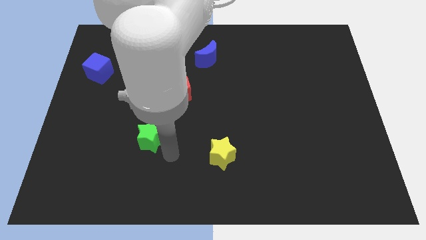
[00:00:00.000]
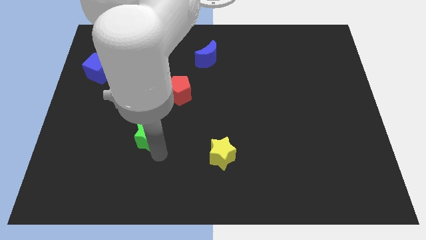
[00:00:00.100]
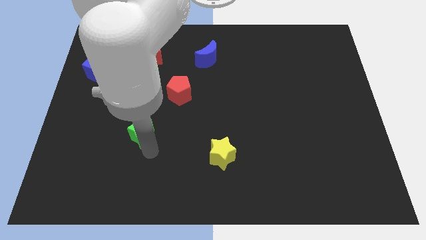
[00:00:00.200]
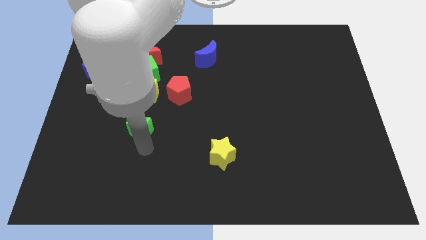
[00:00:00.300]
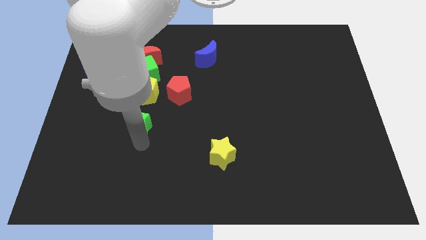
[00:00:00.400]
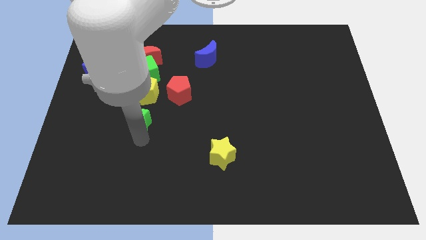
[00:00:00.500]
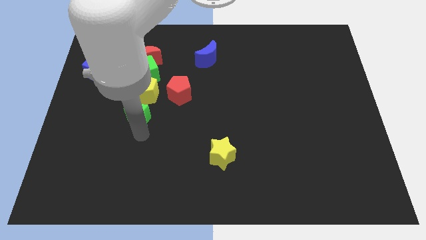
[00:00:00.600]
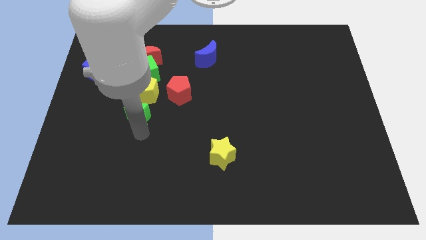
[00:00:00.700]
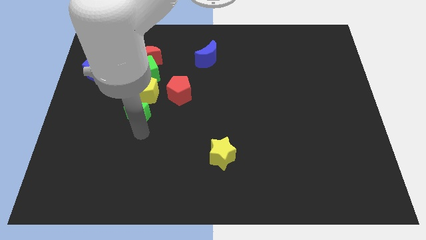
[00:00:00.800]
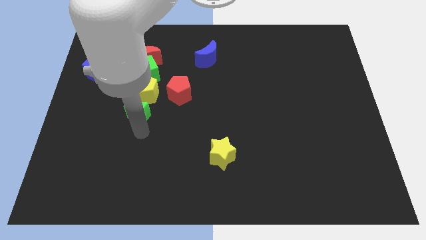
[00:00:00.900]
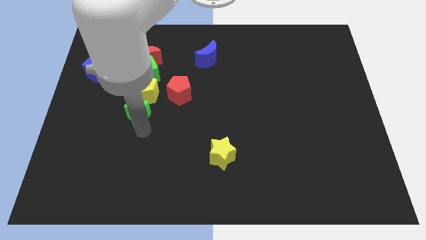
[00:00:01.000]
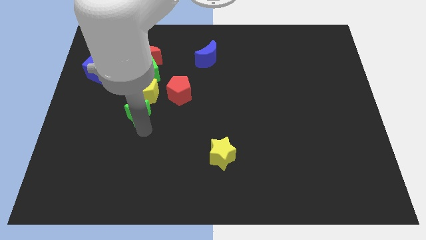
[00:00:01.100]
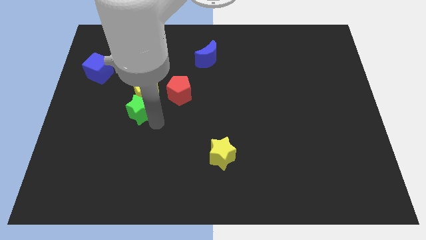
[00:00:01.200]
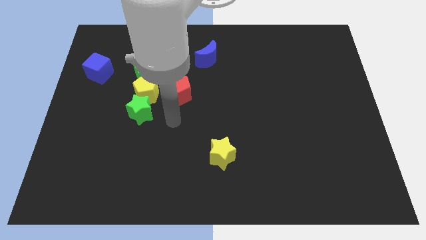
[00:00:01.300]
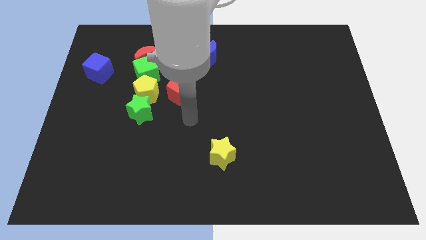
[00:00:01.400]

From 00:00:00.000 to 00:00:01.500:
place the green star below the yellow pentagon

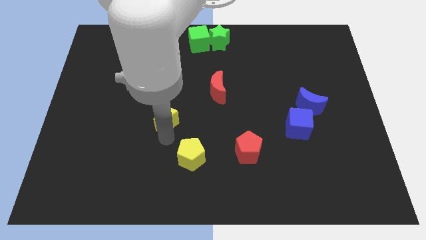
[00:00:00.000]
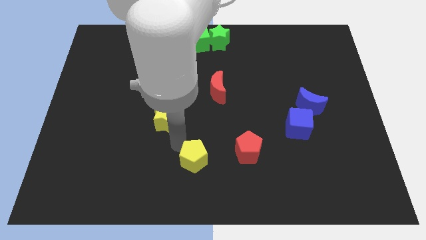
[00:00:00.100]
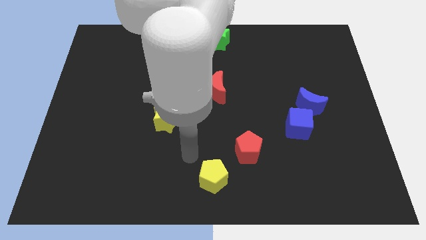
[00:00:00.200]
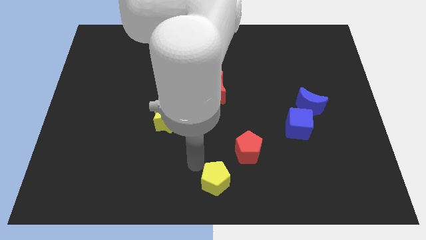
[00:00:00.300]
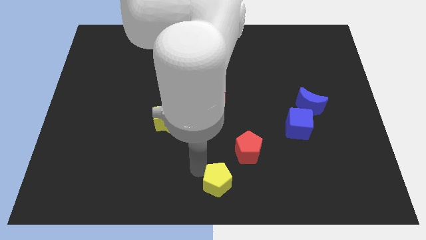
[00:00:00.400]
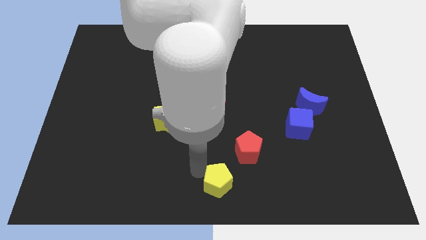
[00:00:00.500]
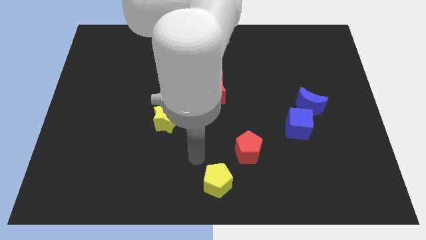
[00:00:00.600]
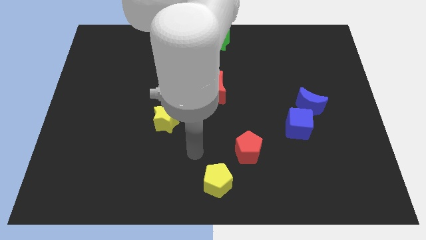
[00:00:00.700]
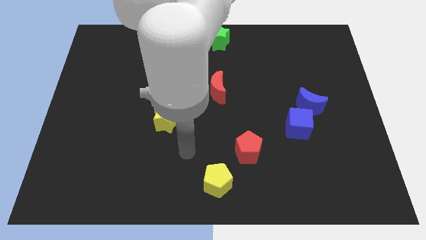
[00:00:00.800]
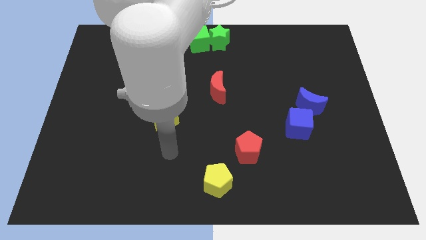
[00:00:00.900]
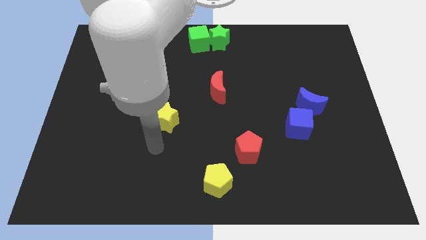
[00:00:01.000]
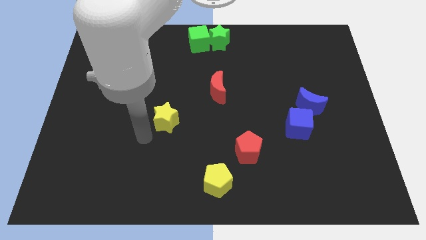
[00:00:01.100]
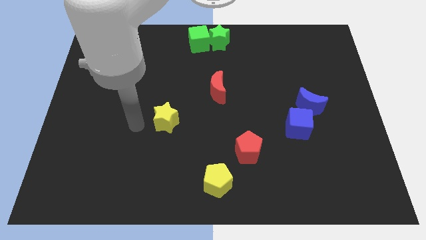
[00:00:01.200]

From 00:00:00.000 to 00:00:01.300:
push the yellow pentagon towards bottom center of the board

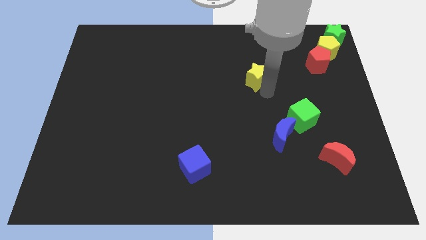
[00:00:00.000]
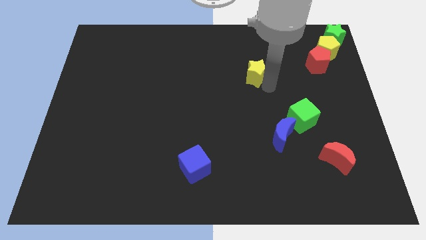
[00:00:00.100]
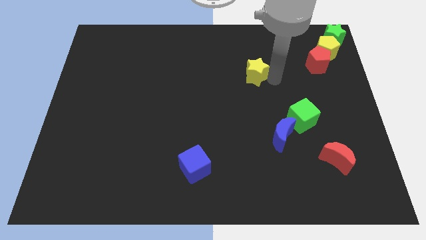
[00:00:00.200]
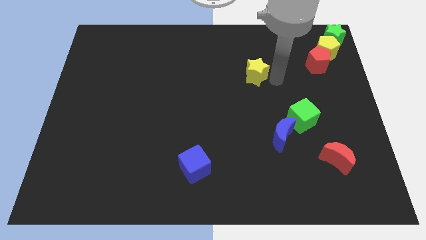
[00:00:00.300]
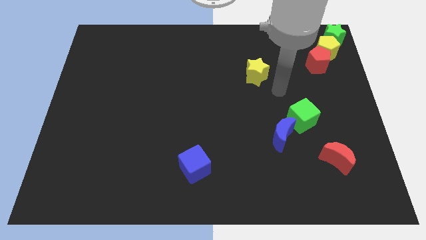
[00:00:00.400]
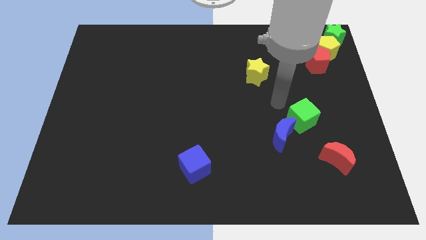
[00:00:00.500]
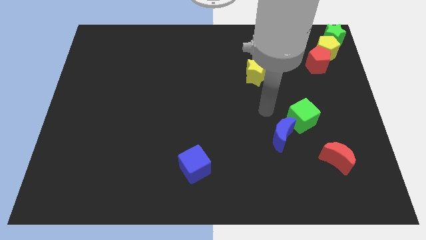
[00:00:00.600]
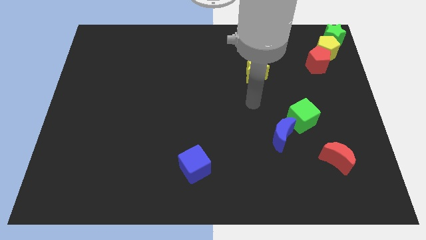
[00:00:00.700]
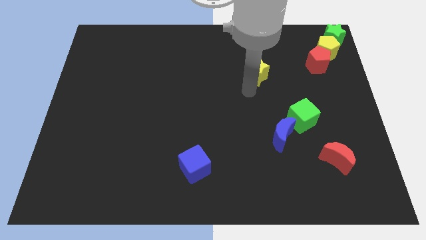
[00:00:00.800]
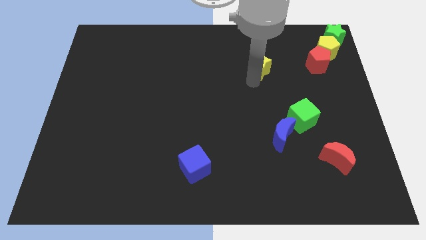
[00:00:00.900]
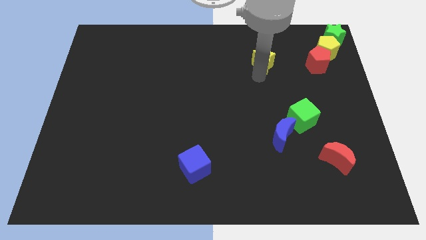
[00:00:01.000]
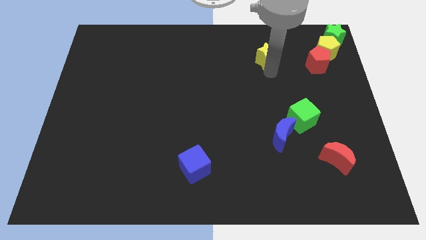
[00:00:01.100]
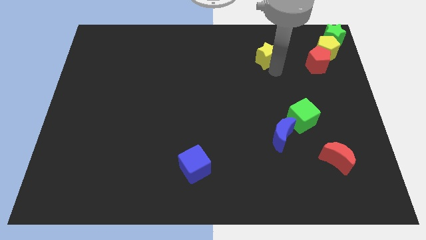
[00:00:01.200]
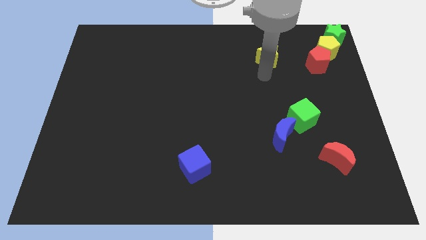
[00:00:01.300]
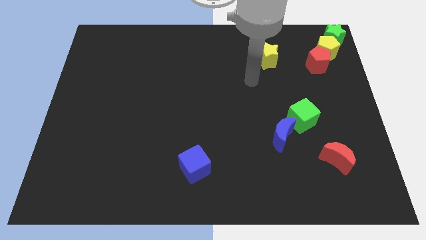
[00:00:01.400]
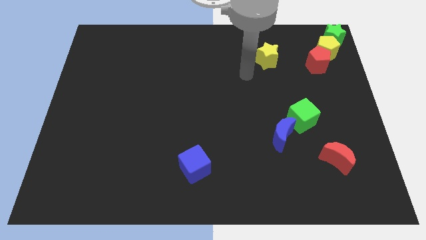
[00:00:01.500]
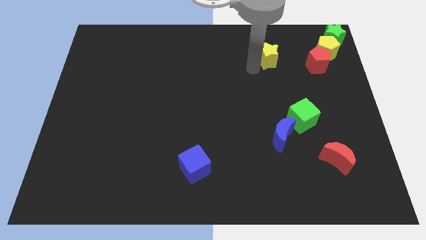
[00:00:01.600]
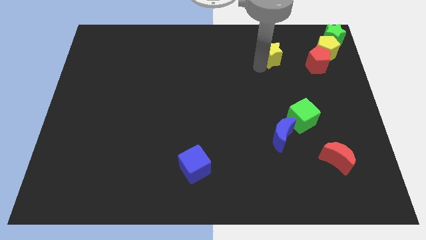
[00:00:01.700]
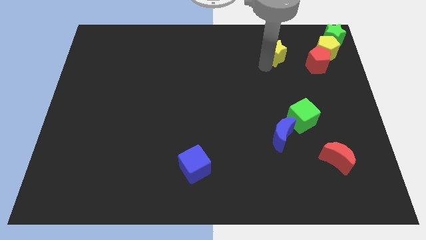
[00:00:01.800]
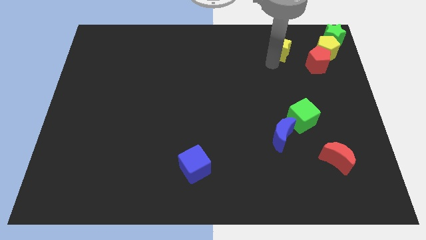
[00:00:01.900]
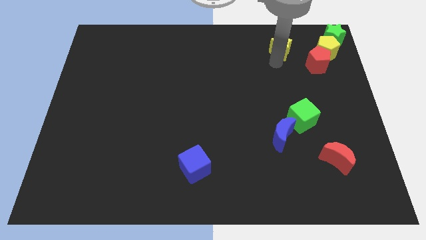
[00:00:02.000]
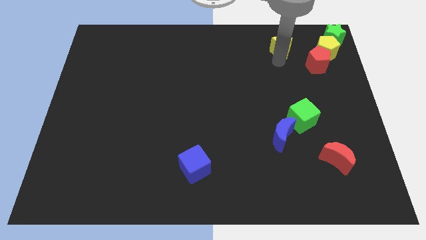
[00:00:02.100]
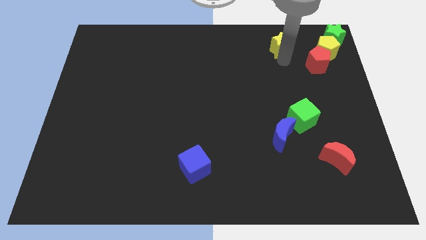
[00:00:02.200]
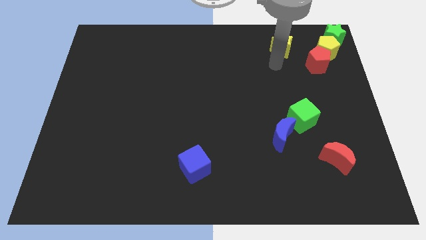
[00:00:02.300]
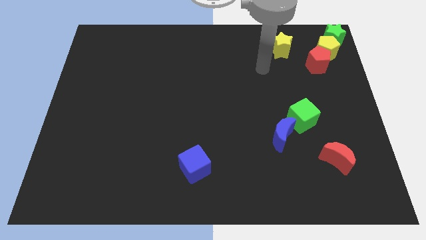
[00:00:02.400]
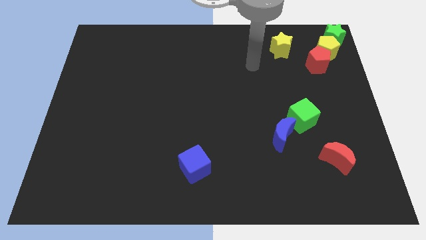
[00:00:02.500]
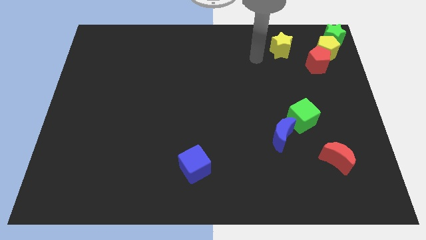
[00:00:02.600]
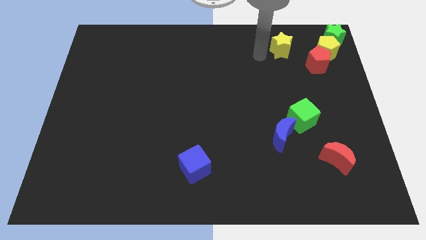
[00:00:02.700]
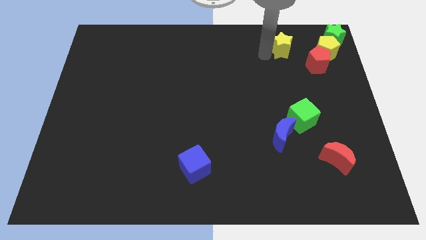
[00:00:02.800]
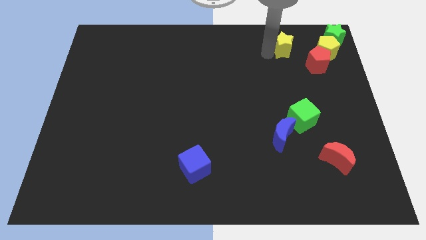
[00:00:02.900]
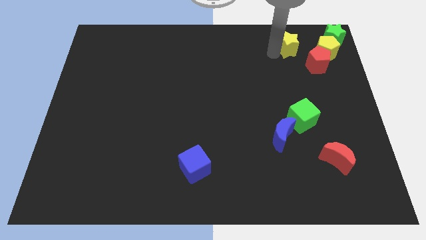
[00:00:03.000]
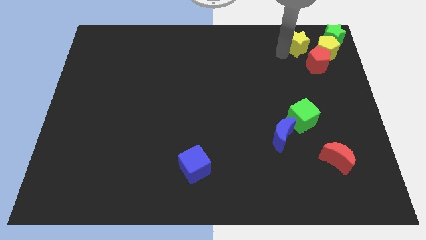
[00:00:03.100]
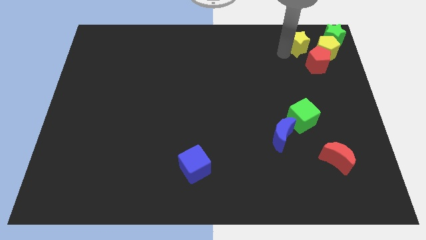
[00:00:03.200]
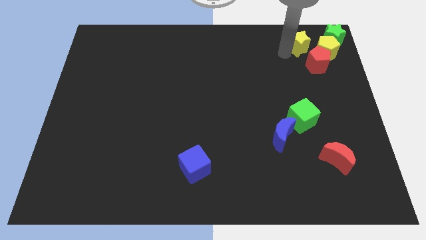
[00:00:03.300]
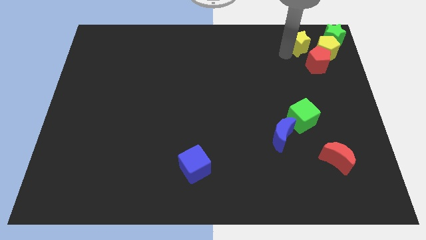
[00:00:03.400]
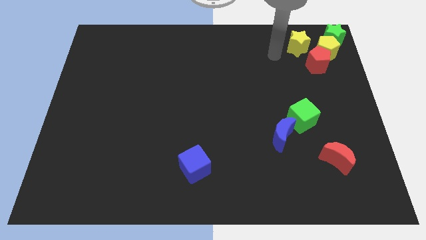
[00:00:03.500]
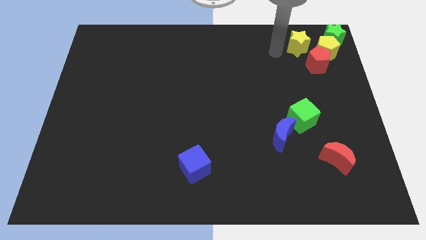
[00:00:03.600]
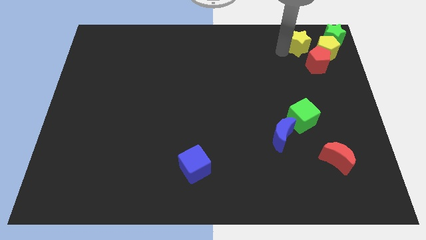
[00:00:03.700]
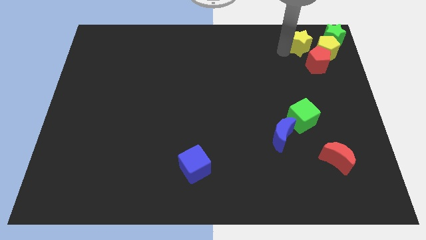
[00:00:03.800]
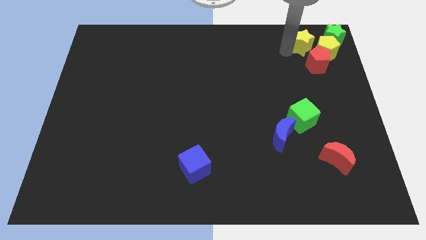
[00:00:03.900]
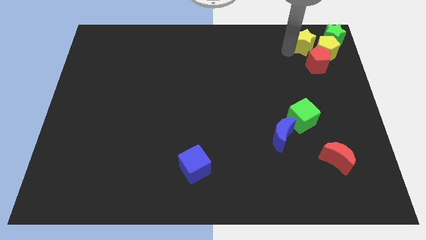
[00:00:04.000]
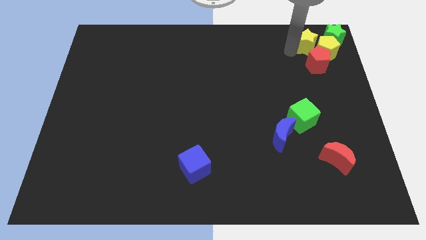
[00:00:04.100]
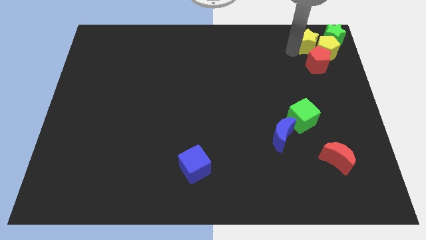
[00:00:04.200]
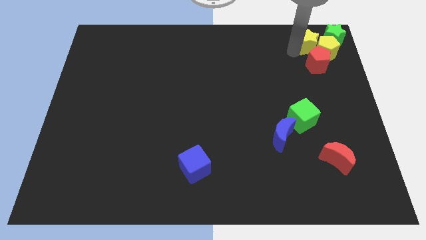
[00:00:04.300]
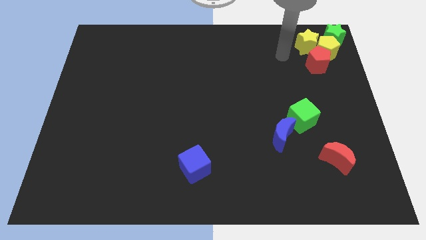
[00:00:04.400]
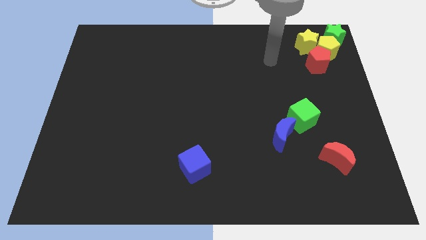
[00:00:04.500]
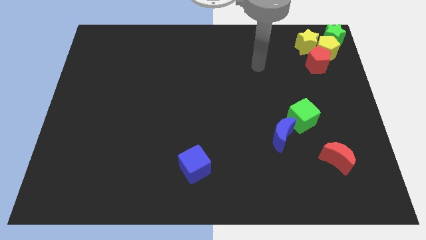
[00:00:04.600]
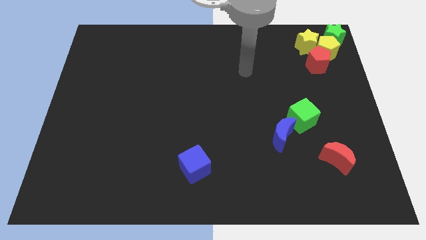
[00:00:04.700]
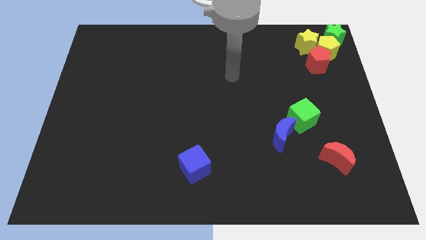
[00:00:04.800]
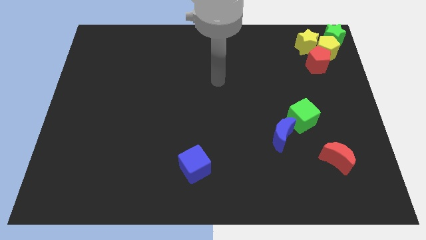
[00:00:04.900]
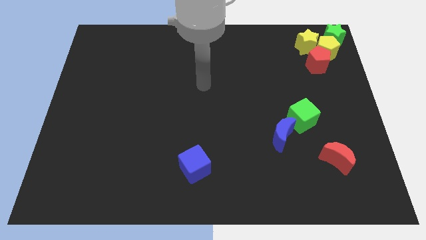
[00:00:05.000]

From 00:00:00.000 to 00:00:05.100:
move the yellow star close to the yellow pentagon

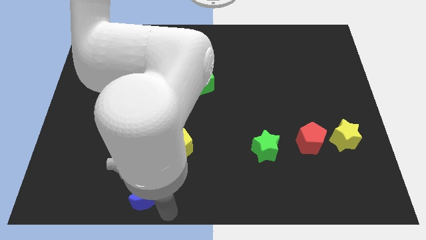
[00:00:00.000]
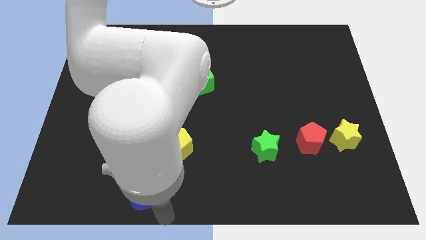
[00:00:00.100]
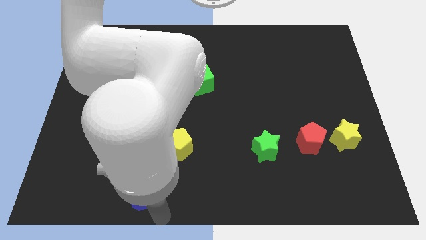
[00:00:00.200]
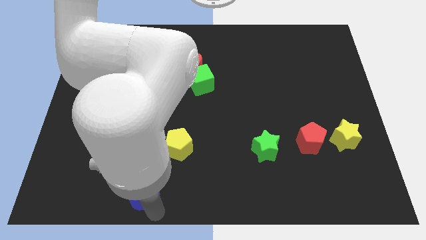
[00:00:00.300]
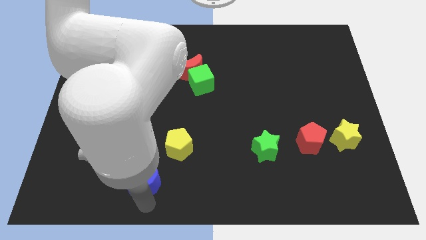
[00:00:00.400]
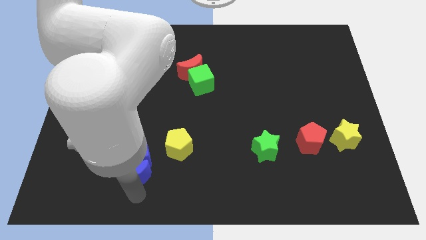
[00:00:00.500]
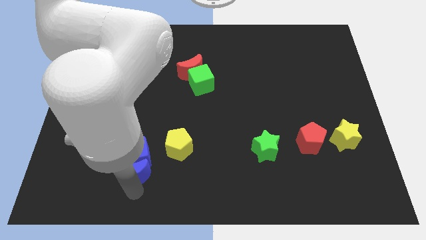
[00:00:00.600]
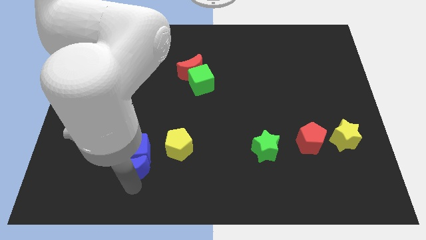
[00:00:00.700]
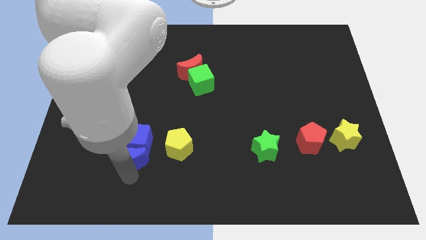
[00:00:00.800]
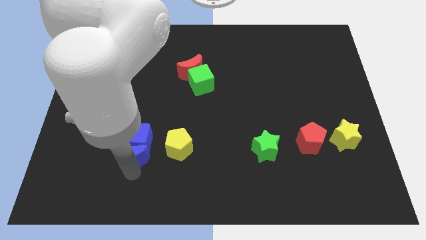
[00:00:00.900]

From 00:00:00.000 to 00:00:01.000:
move the blue blocks to the left of the yellow pentagon
